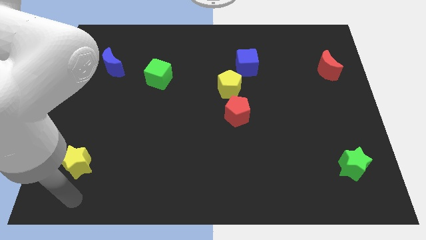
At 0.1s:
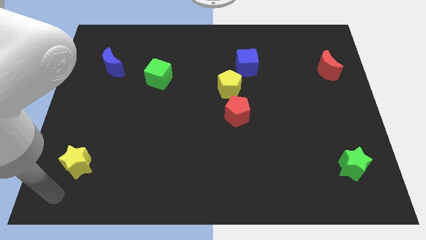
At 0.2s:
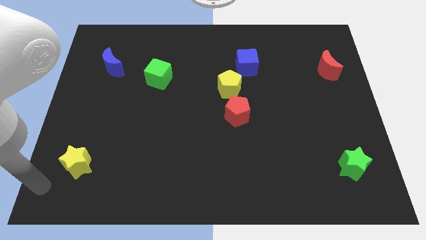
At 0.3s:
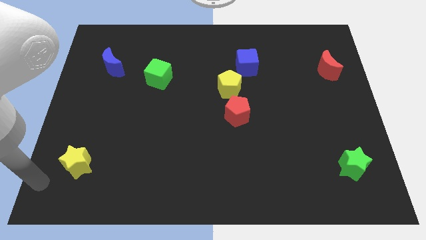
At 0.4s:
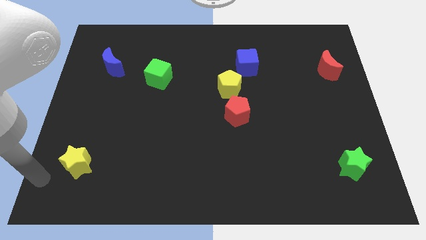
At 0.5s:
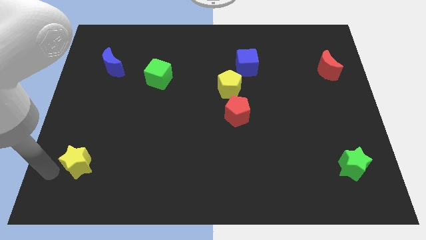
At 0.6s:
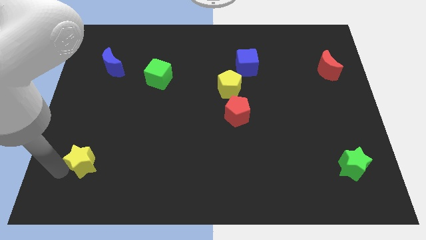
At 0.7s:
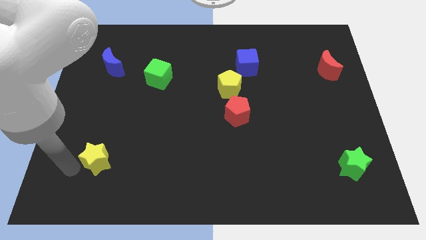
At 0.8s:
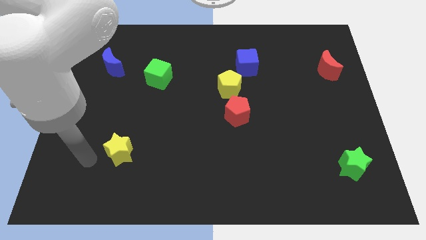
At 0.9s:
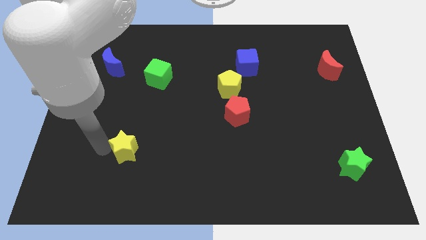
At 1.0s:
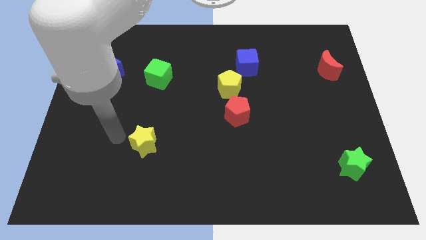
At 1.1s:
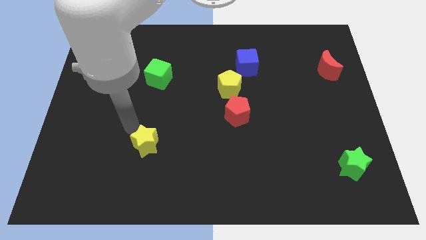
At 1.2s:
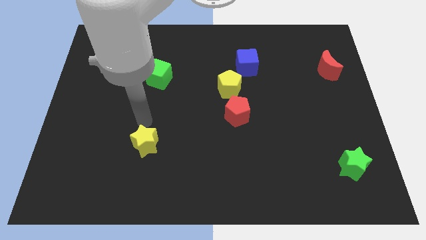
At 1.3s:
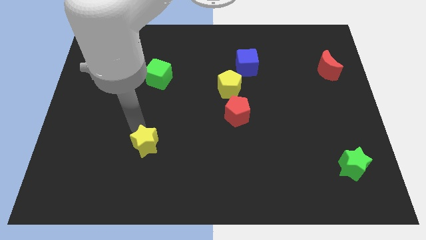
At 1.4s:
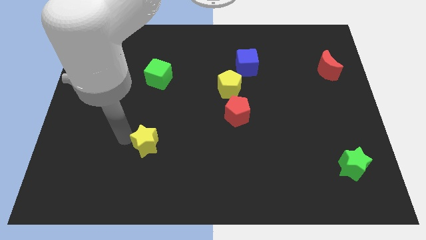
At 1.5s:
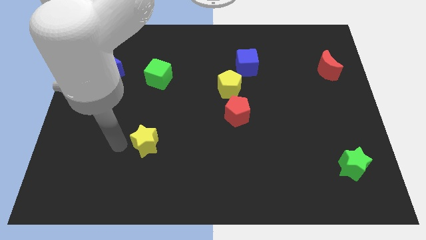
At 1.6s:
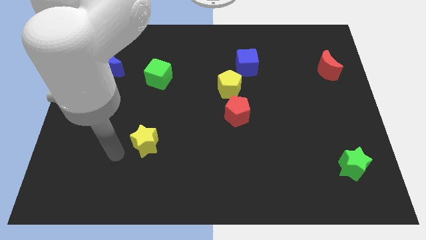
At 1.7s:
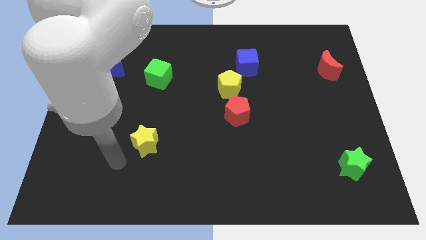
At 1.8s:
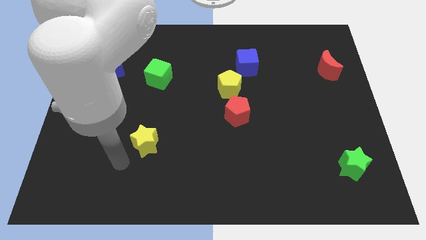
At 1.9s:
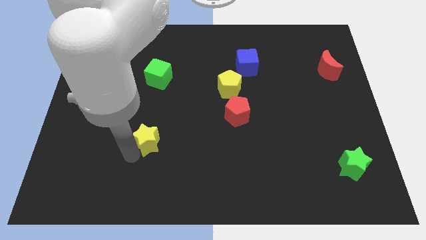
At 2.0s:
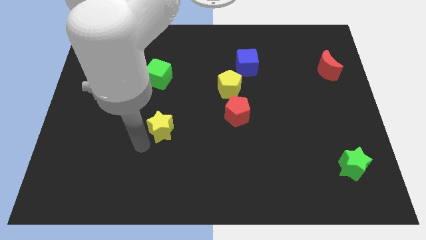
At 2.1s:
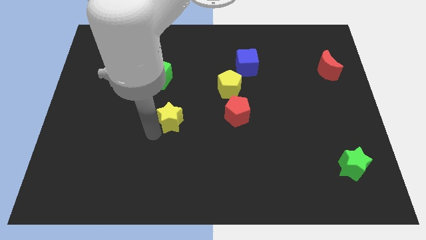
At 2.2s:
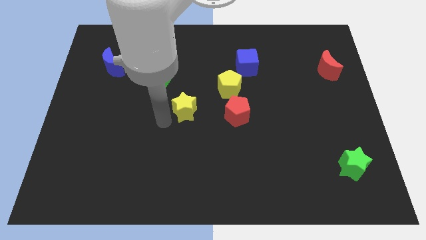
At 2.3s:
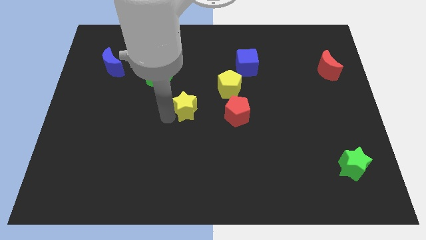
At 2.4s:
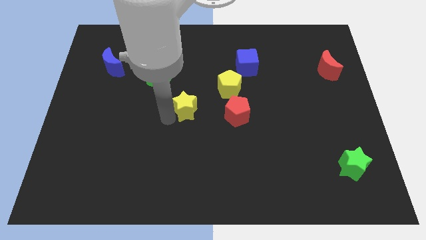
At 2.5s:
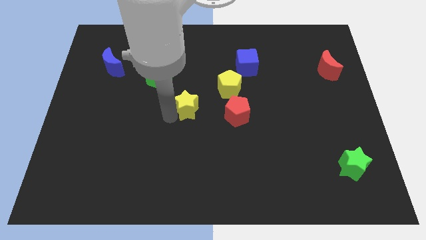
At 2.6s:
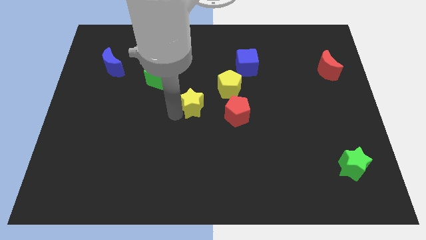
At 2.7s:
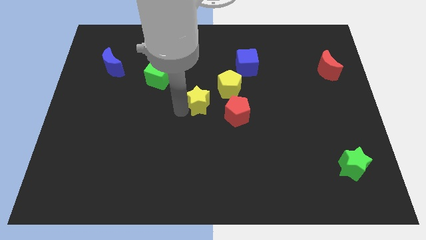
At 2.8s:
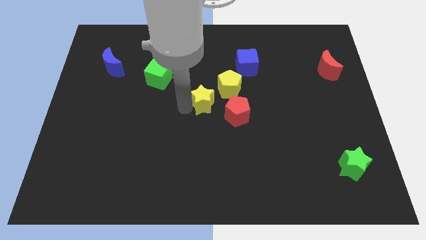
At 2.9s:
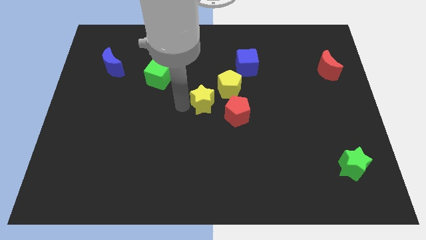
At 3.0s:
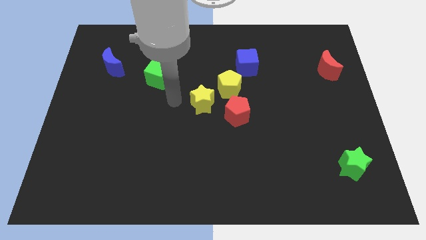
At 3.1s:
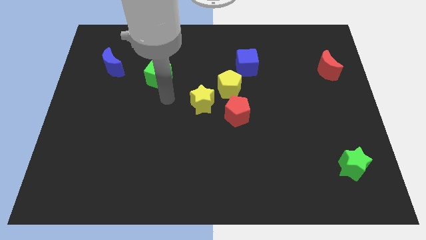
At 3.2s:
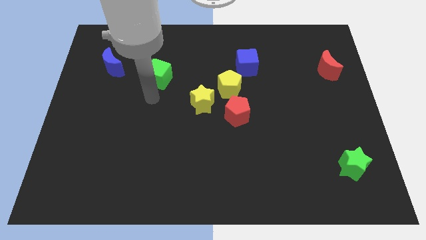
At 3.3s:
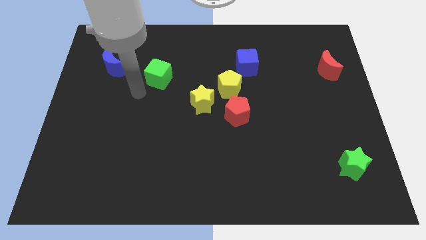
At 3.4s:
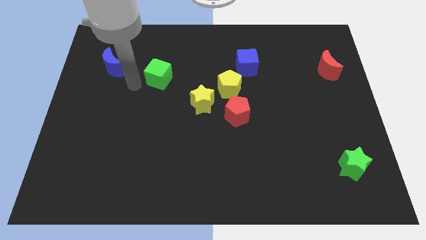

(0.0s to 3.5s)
put yellow star at bottom left to yellow pentagon

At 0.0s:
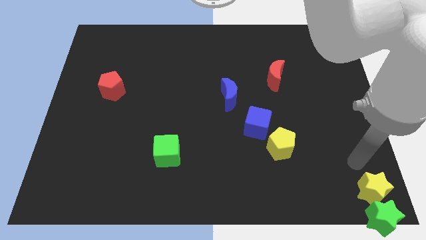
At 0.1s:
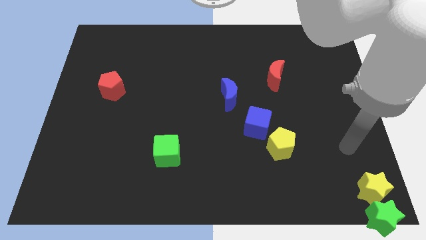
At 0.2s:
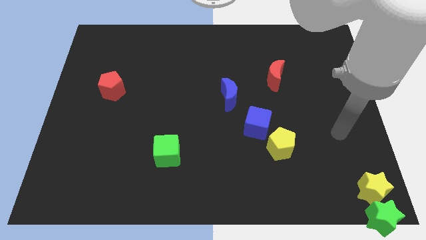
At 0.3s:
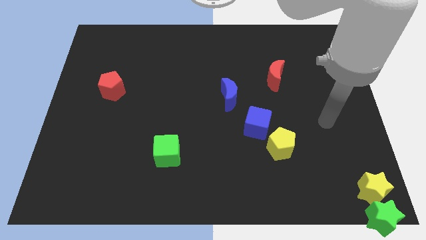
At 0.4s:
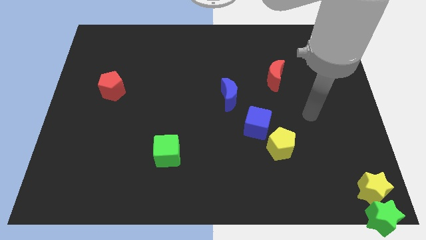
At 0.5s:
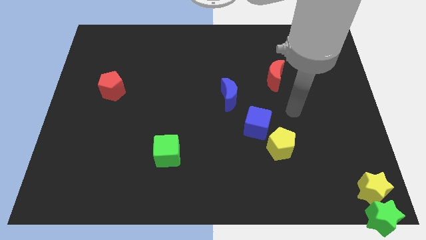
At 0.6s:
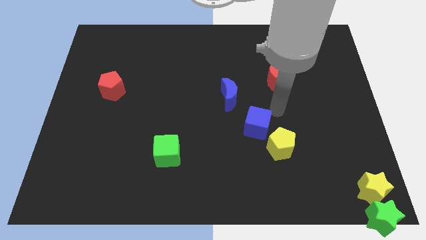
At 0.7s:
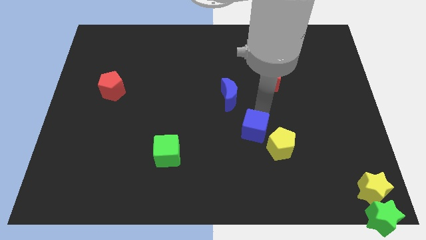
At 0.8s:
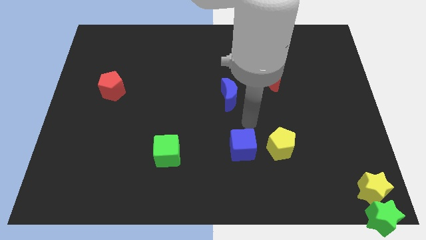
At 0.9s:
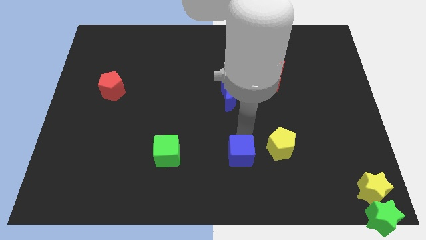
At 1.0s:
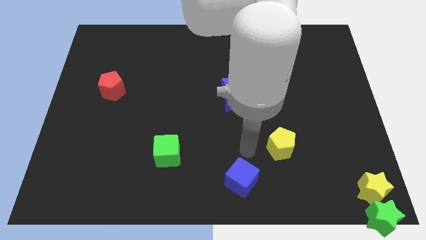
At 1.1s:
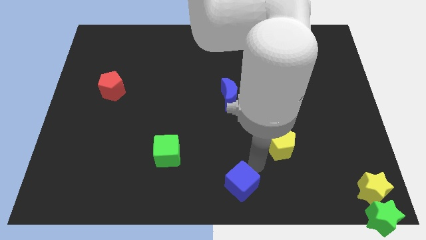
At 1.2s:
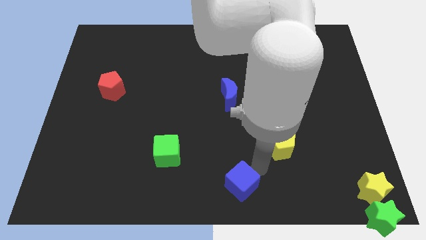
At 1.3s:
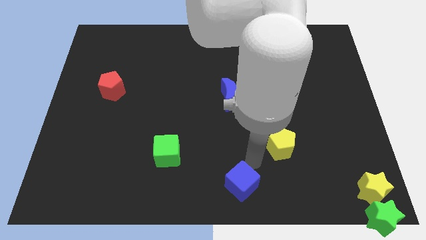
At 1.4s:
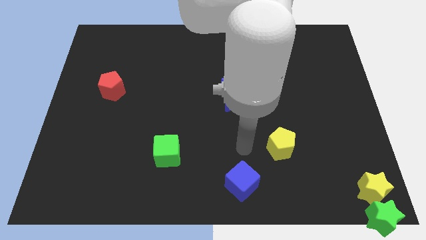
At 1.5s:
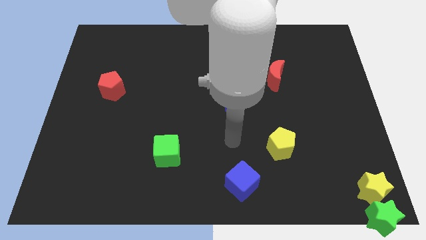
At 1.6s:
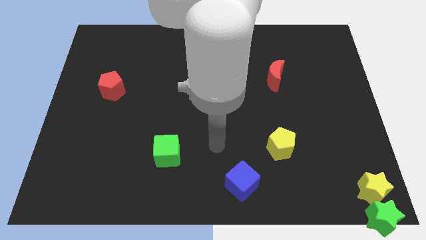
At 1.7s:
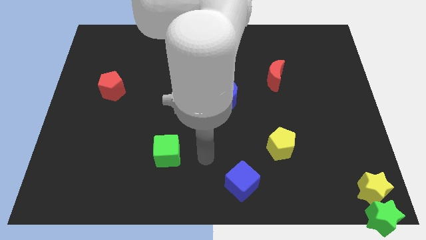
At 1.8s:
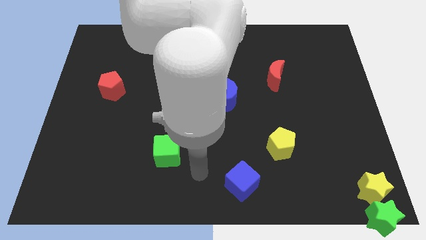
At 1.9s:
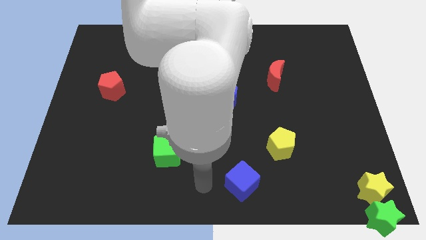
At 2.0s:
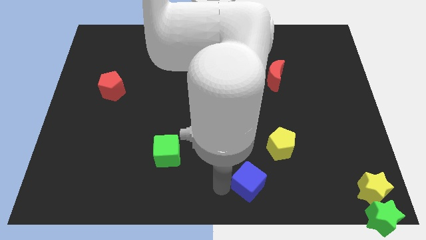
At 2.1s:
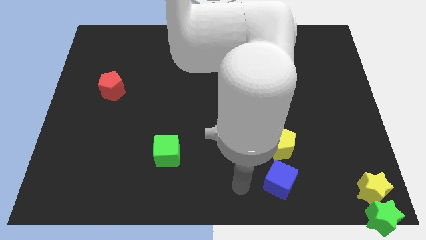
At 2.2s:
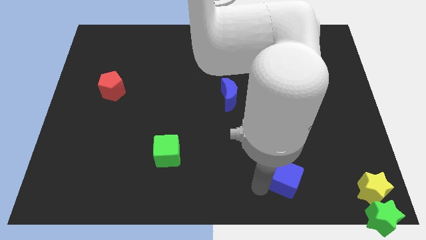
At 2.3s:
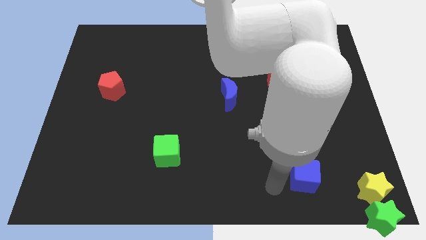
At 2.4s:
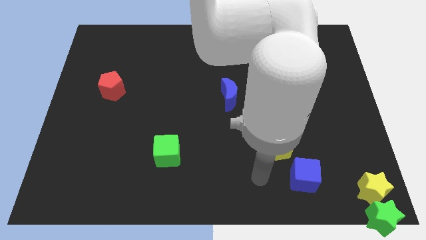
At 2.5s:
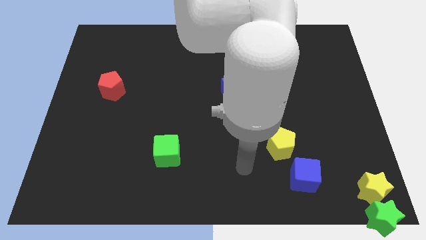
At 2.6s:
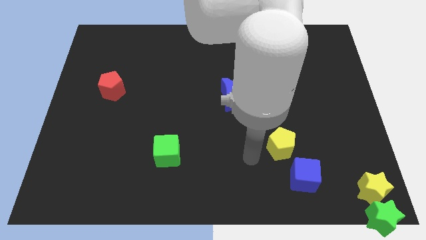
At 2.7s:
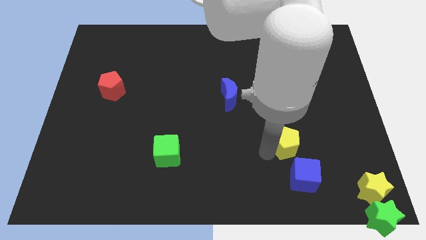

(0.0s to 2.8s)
place teh blue cube below yellow pentagon

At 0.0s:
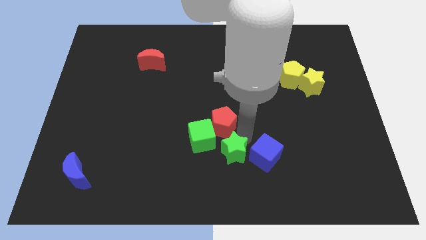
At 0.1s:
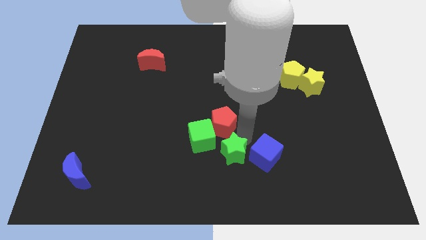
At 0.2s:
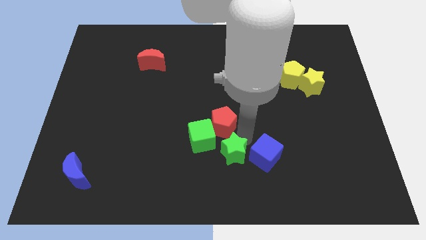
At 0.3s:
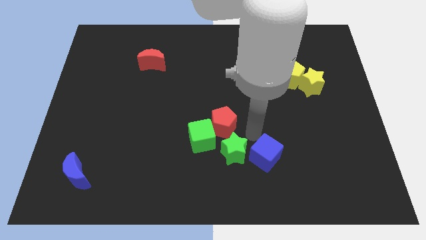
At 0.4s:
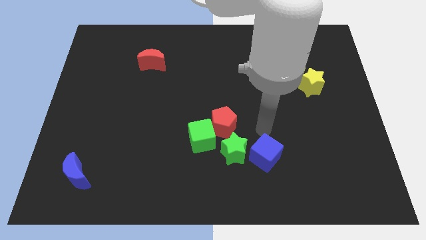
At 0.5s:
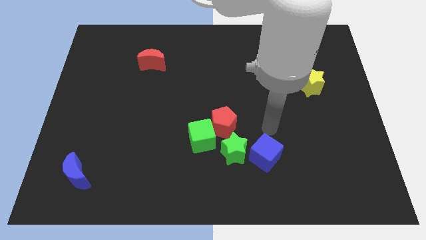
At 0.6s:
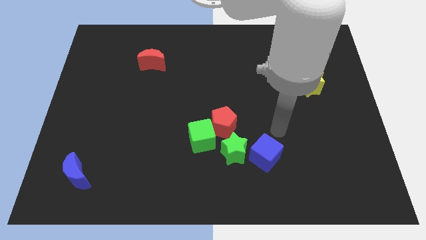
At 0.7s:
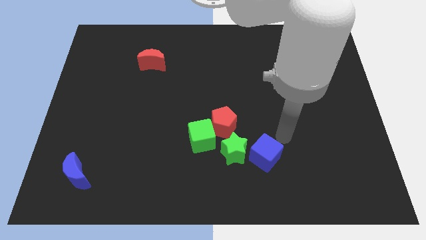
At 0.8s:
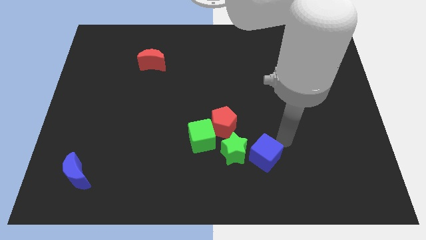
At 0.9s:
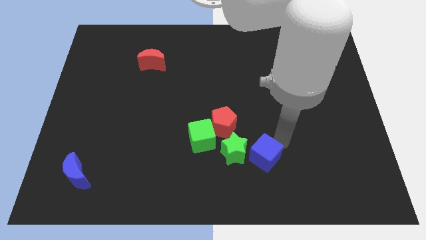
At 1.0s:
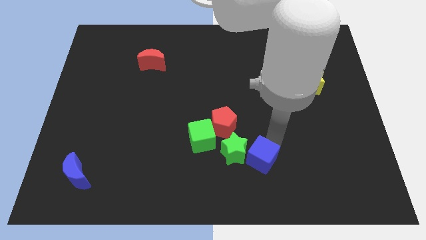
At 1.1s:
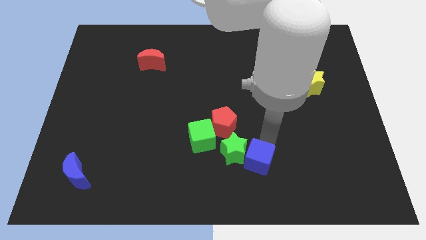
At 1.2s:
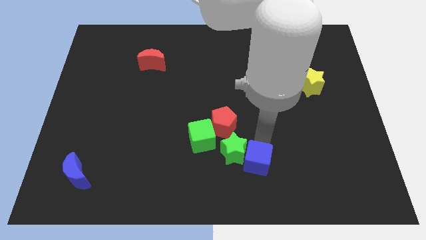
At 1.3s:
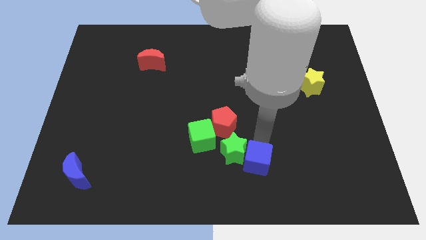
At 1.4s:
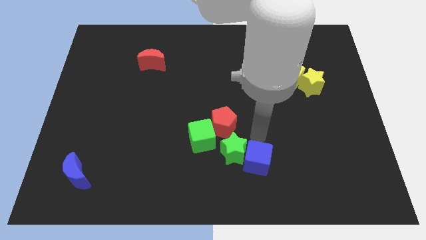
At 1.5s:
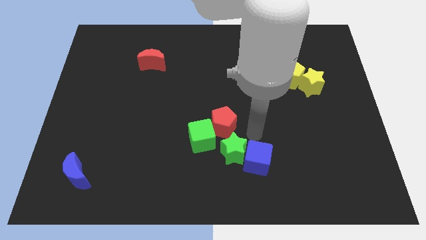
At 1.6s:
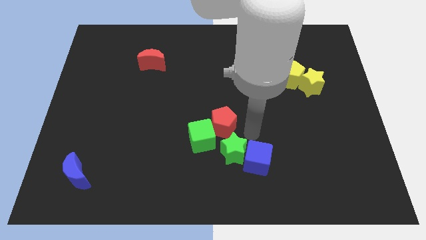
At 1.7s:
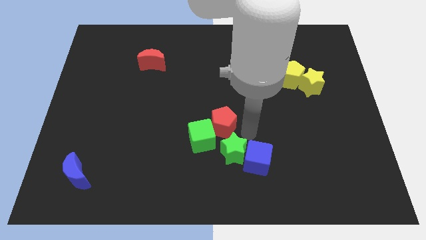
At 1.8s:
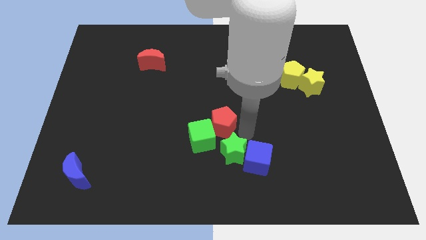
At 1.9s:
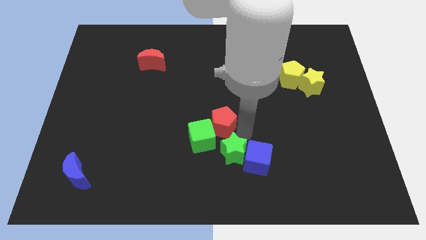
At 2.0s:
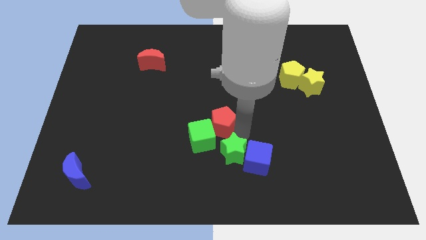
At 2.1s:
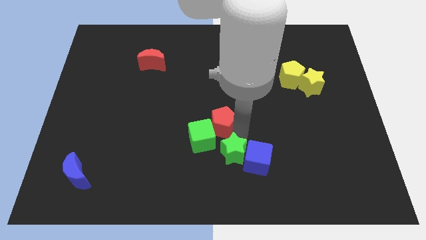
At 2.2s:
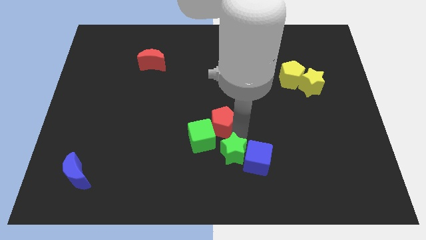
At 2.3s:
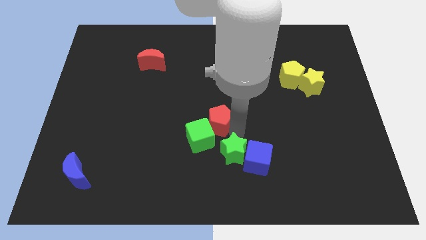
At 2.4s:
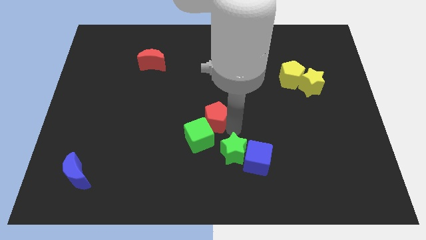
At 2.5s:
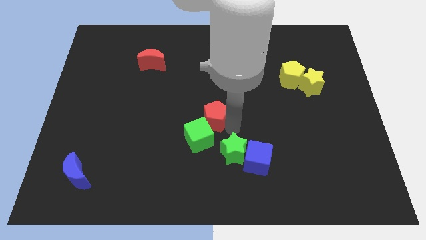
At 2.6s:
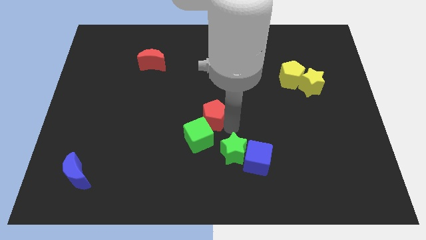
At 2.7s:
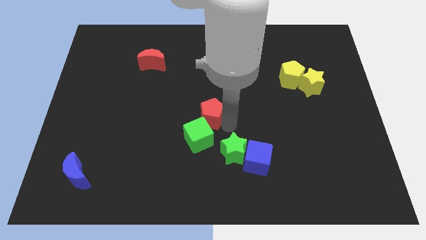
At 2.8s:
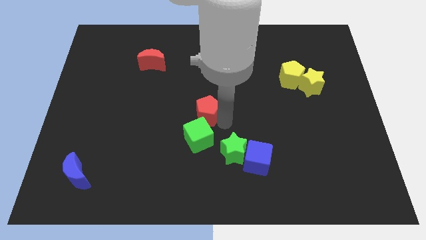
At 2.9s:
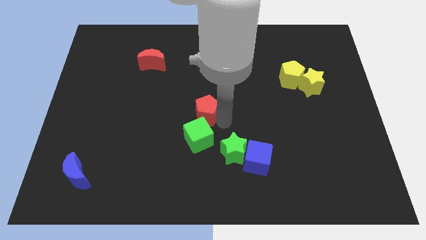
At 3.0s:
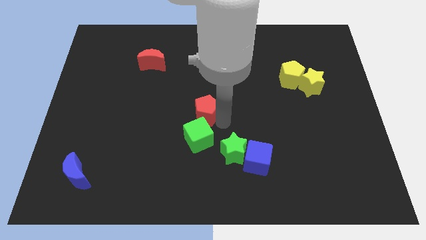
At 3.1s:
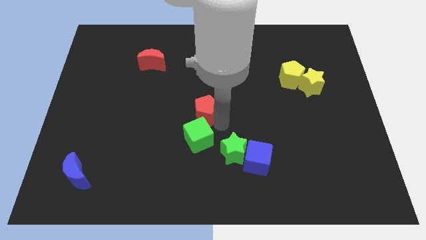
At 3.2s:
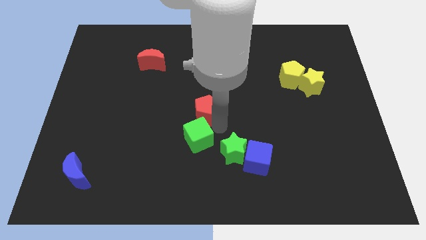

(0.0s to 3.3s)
move the red pentagon to the center of the board
